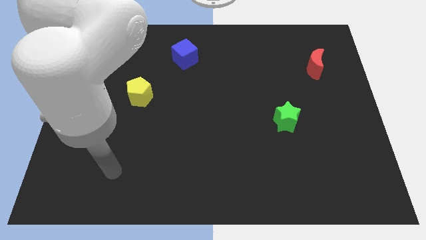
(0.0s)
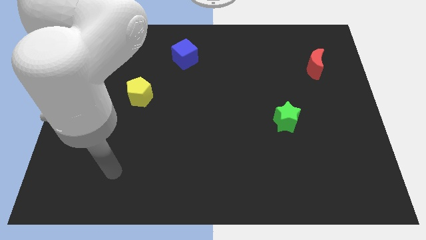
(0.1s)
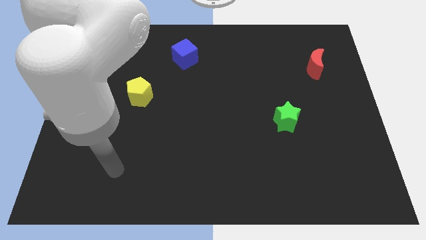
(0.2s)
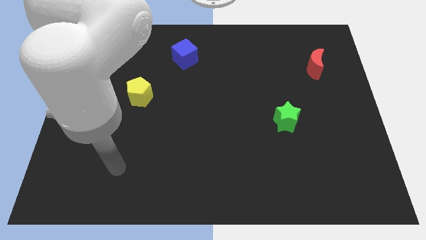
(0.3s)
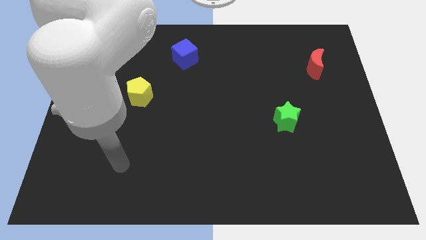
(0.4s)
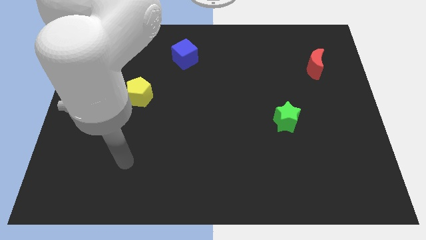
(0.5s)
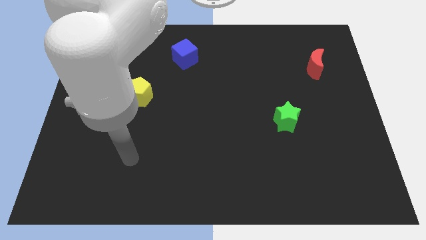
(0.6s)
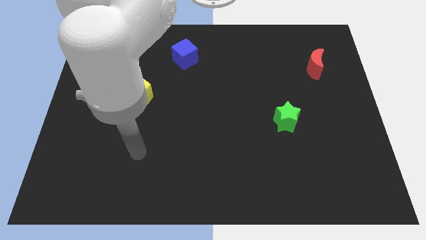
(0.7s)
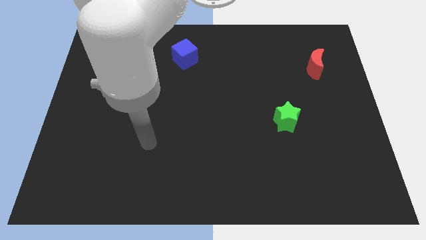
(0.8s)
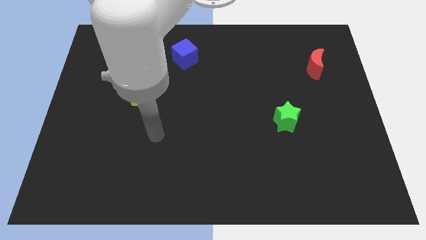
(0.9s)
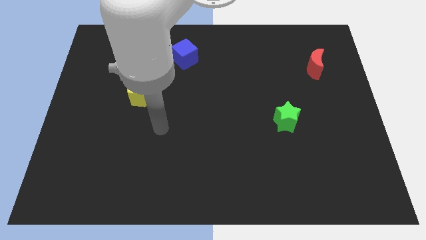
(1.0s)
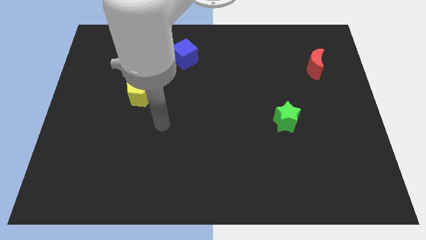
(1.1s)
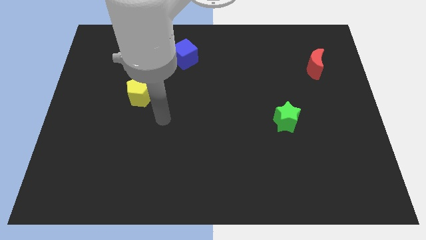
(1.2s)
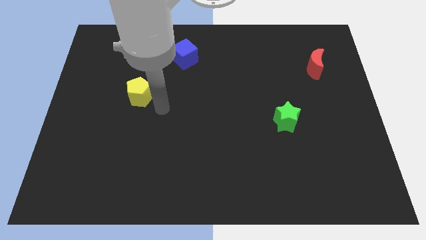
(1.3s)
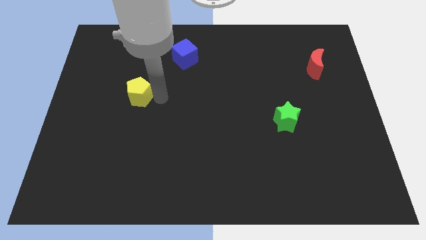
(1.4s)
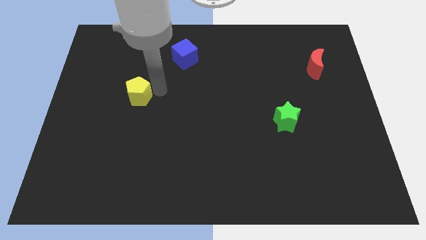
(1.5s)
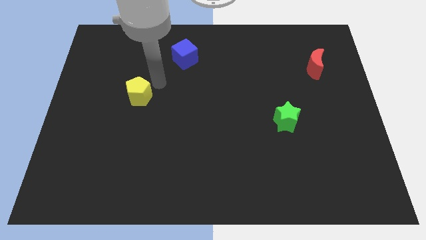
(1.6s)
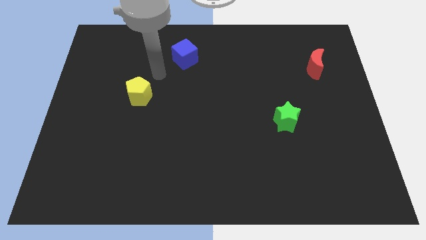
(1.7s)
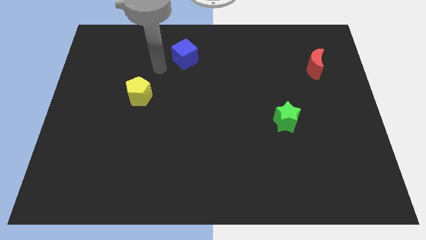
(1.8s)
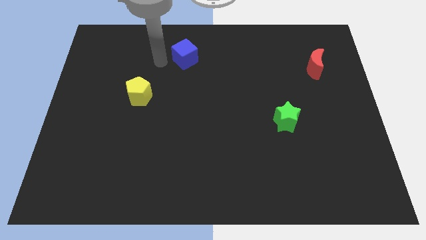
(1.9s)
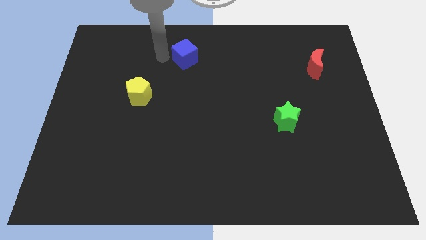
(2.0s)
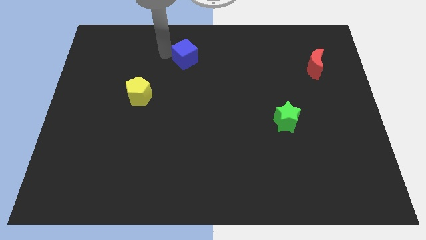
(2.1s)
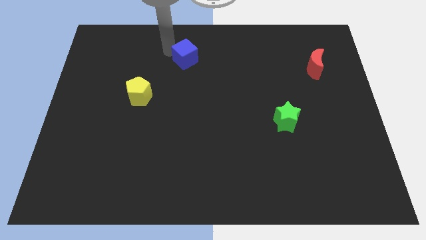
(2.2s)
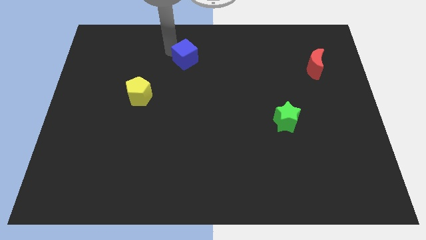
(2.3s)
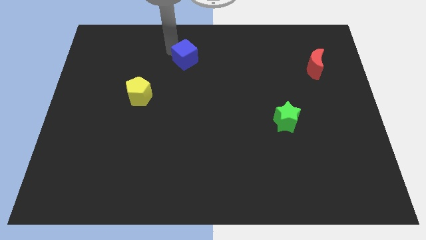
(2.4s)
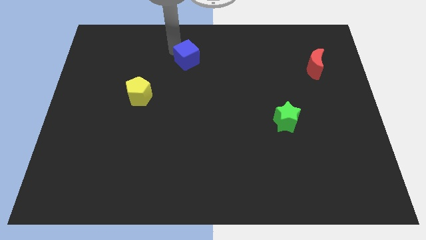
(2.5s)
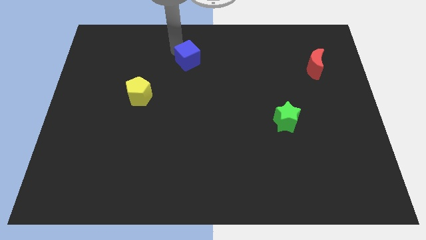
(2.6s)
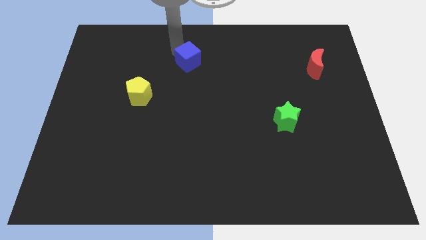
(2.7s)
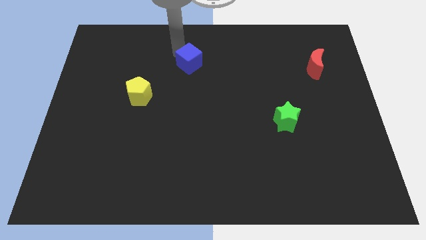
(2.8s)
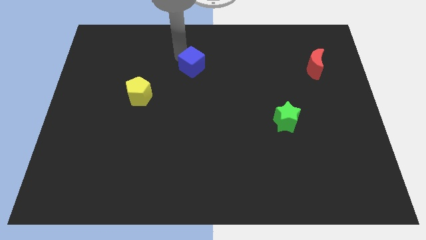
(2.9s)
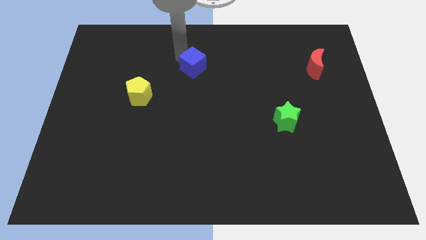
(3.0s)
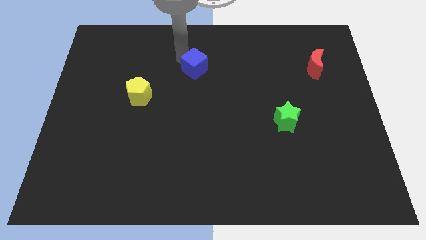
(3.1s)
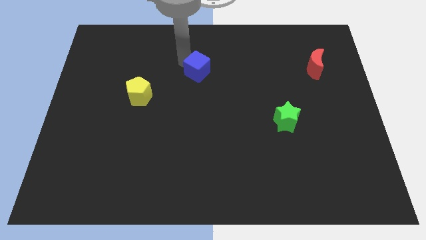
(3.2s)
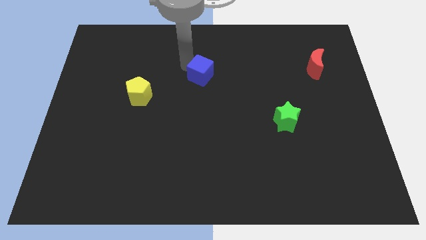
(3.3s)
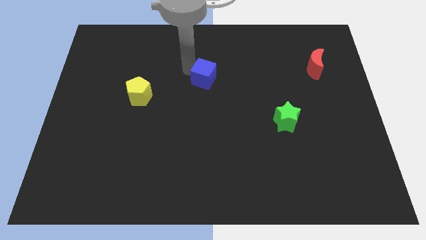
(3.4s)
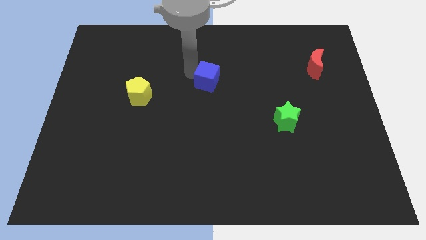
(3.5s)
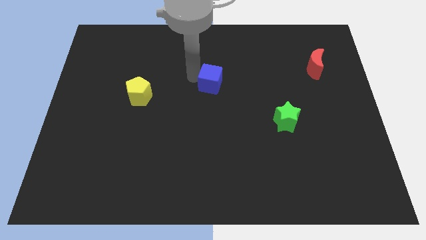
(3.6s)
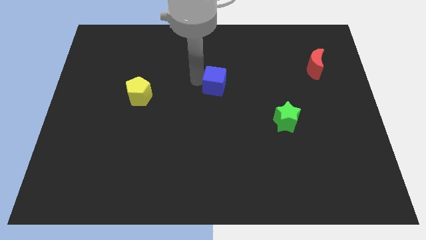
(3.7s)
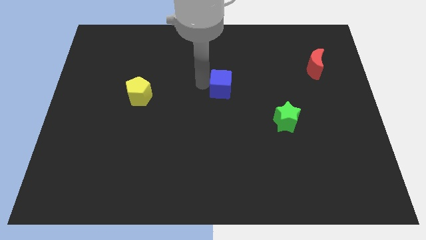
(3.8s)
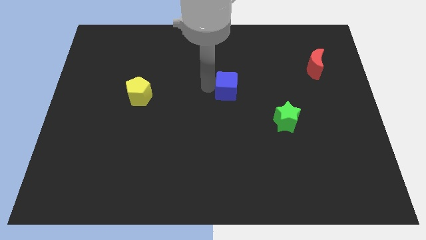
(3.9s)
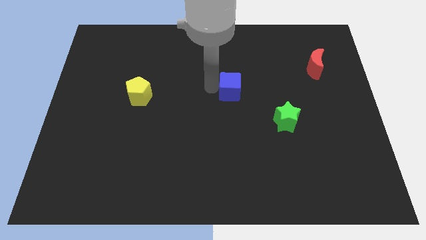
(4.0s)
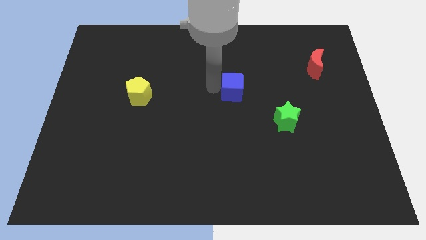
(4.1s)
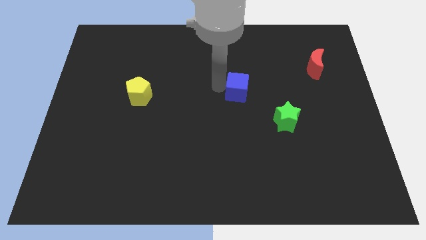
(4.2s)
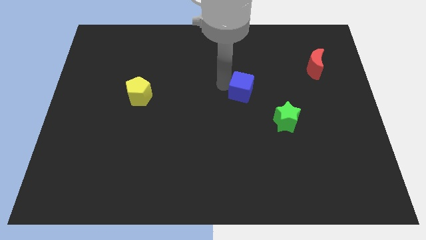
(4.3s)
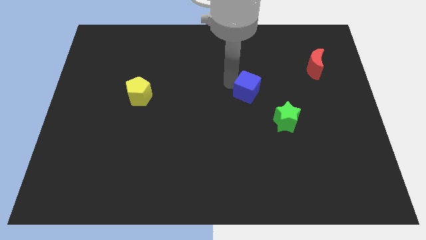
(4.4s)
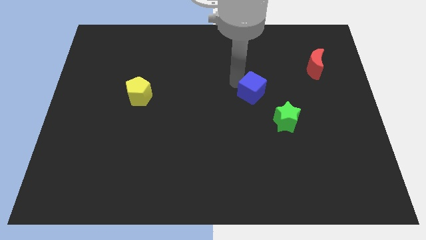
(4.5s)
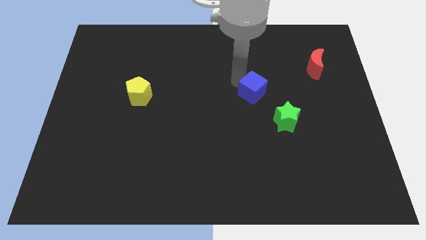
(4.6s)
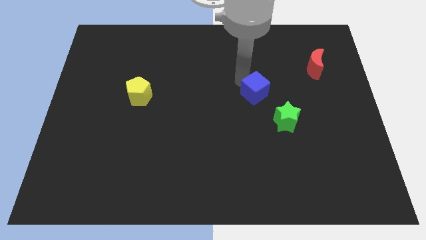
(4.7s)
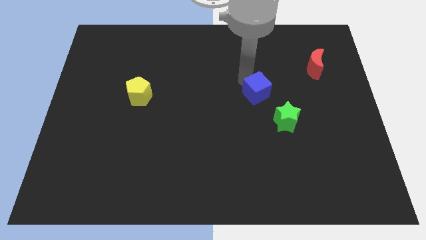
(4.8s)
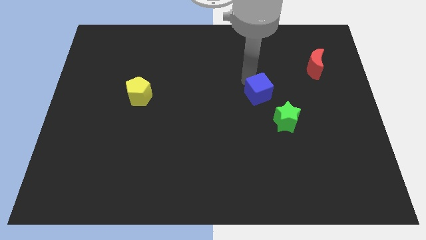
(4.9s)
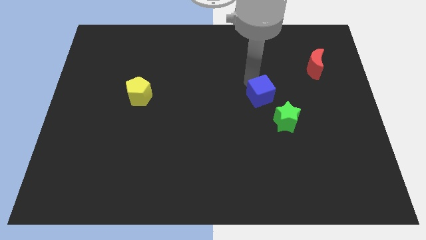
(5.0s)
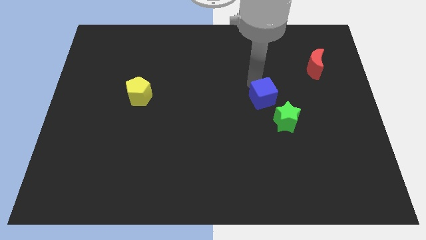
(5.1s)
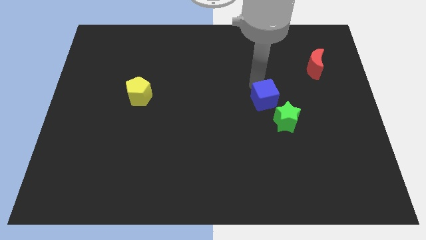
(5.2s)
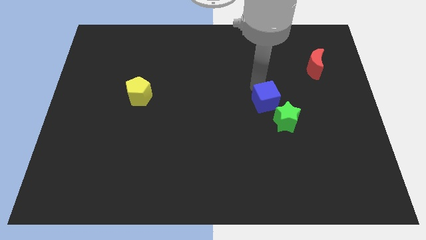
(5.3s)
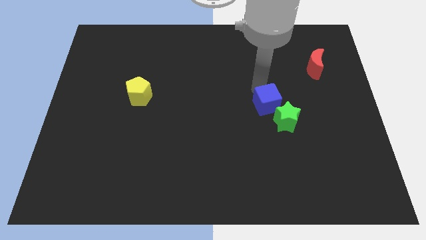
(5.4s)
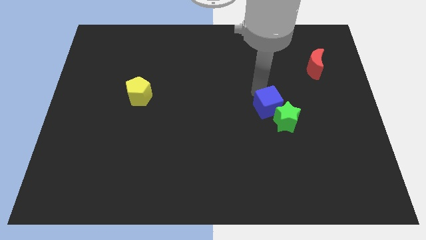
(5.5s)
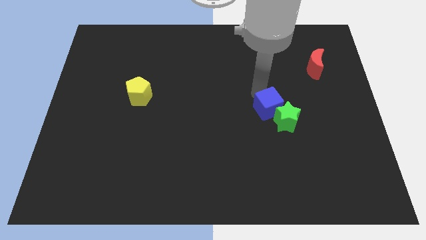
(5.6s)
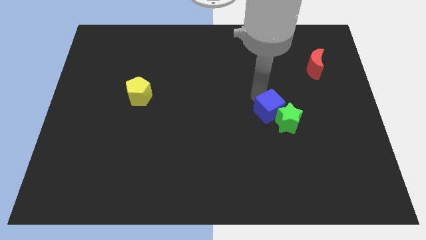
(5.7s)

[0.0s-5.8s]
push the blue block close to the star

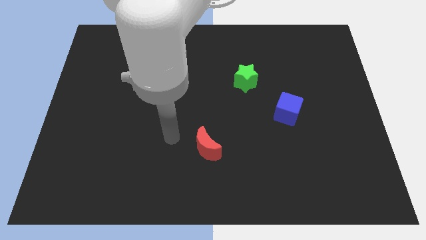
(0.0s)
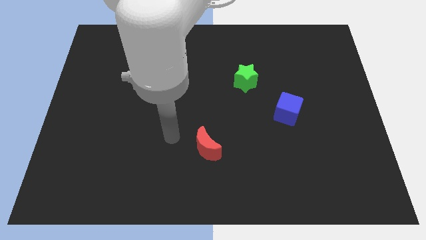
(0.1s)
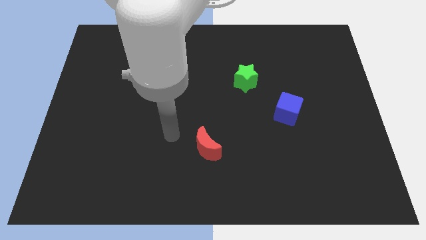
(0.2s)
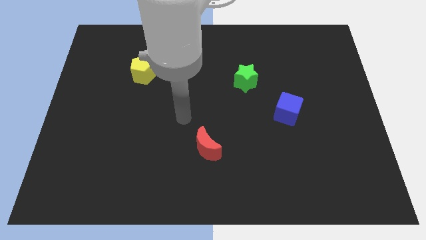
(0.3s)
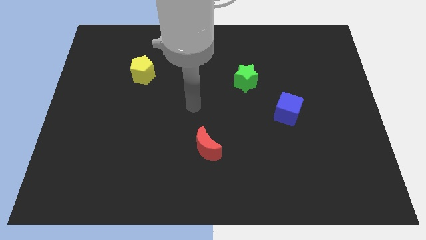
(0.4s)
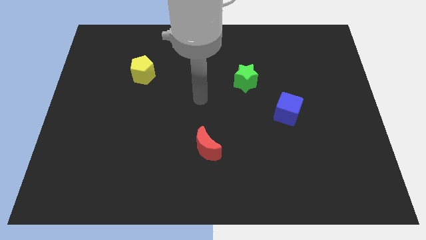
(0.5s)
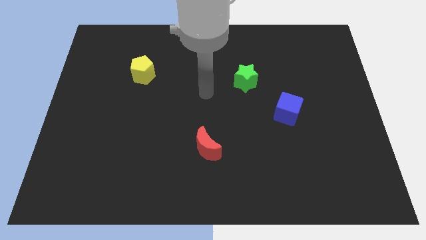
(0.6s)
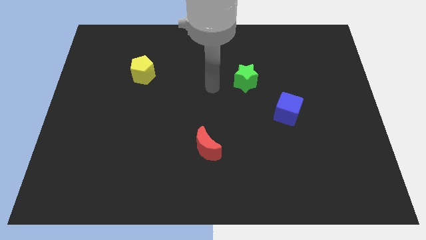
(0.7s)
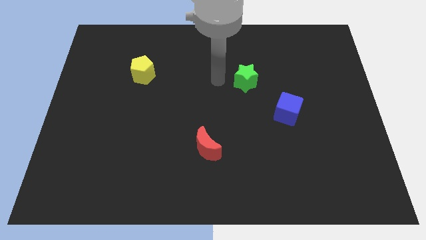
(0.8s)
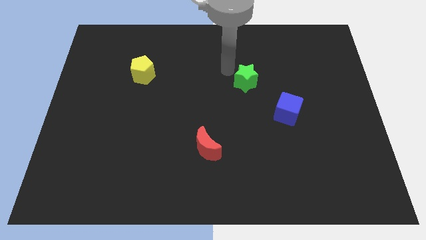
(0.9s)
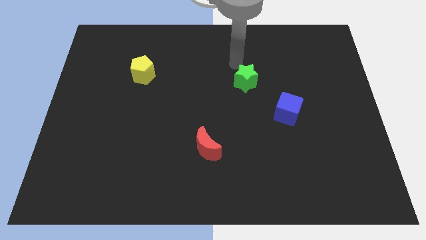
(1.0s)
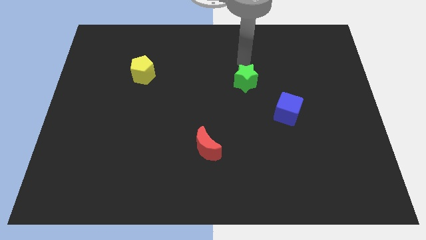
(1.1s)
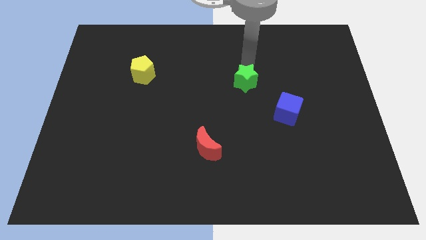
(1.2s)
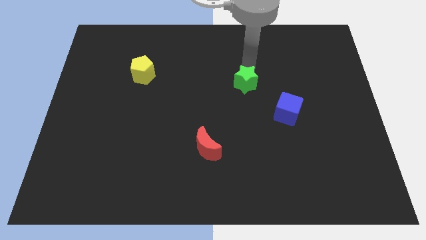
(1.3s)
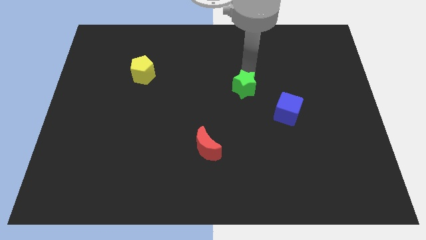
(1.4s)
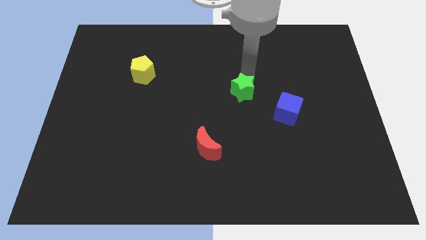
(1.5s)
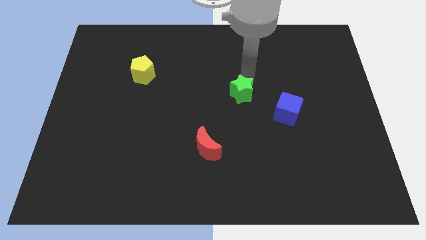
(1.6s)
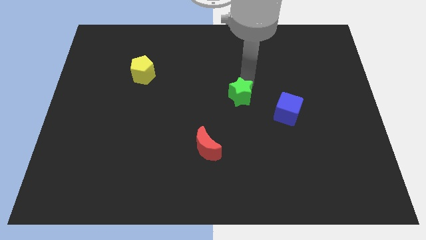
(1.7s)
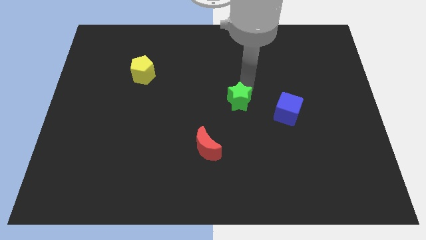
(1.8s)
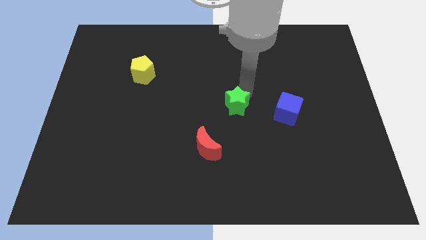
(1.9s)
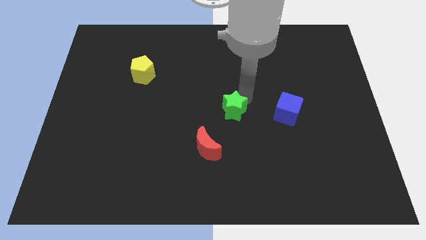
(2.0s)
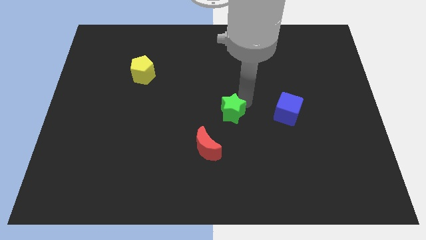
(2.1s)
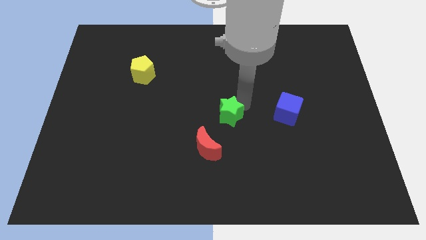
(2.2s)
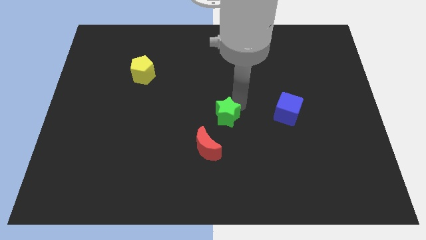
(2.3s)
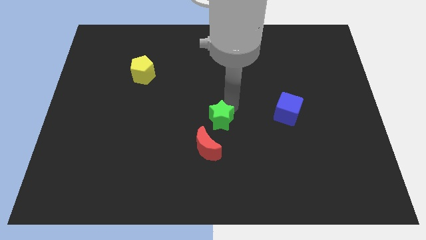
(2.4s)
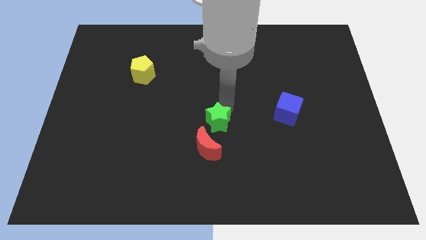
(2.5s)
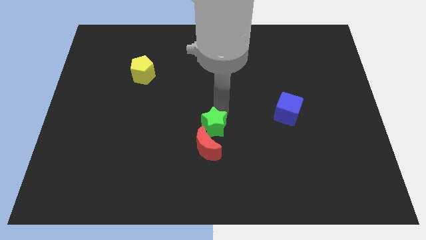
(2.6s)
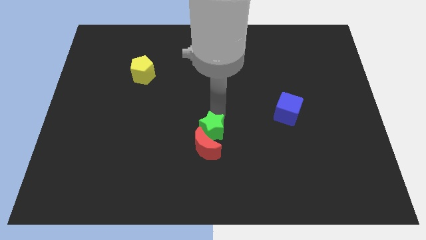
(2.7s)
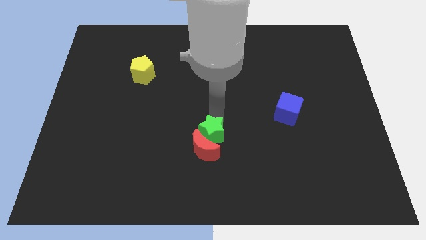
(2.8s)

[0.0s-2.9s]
slide the star next to the red block

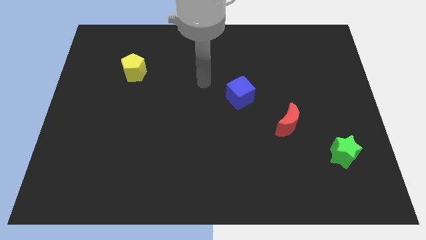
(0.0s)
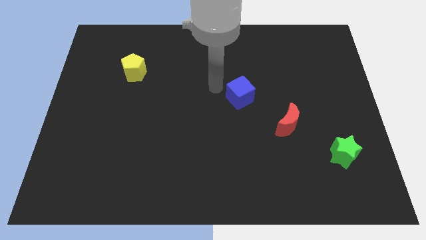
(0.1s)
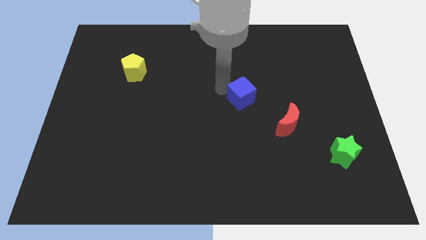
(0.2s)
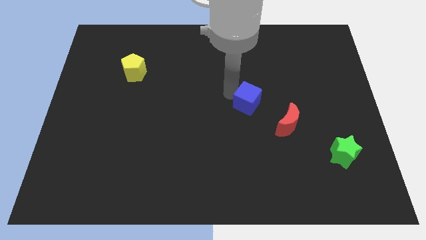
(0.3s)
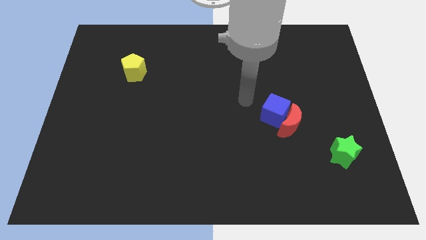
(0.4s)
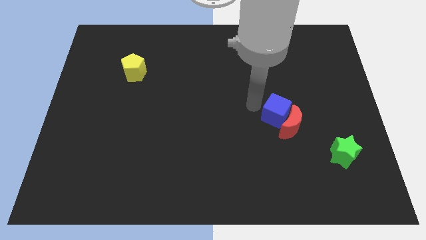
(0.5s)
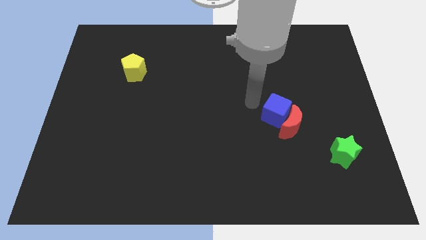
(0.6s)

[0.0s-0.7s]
slide the cube to the red moon
